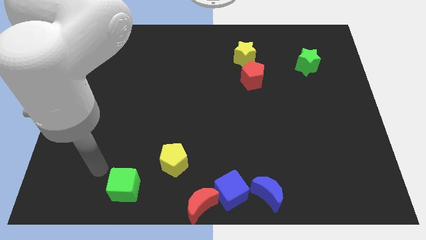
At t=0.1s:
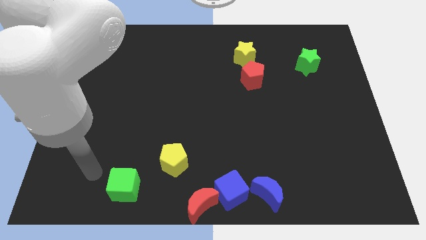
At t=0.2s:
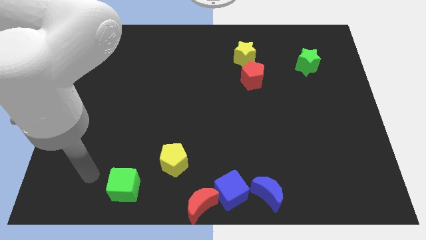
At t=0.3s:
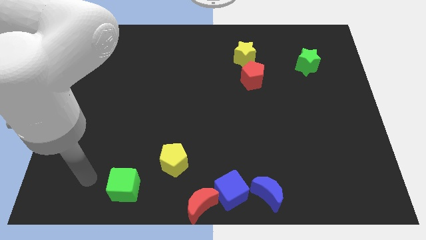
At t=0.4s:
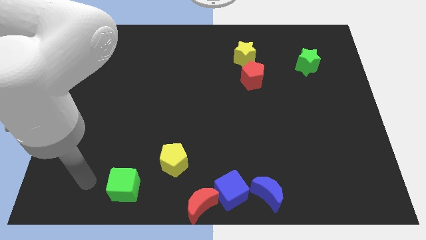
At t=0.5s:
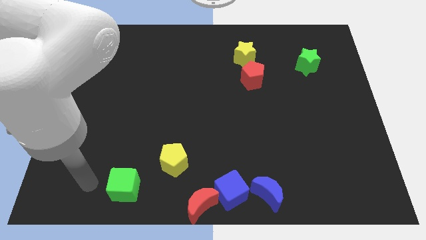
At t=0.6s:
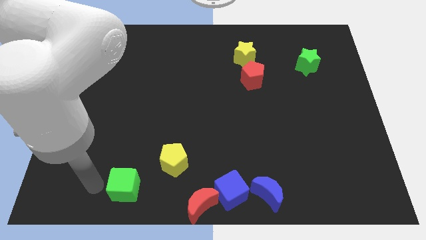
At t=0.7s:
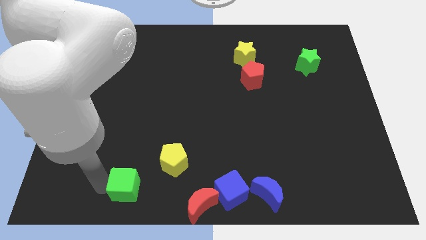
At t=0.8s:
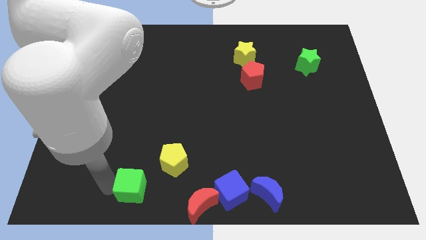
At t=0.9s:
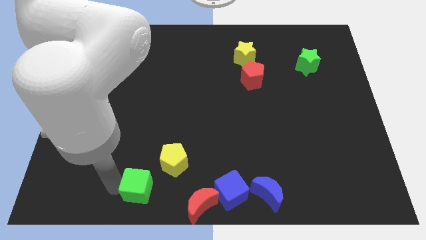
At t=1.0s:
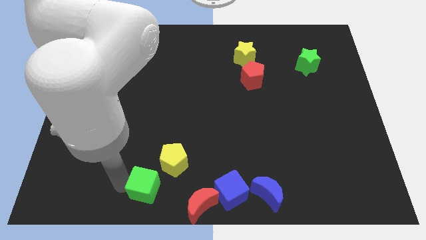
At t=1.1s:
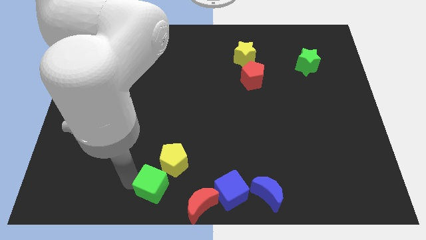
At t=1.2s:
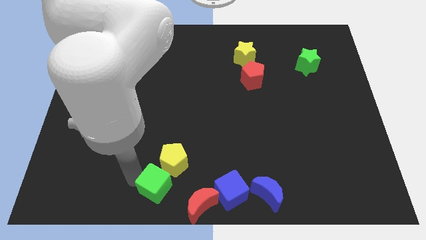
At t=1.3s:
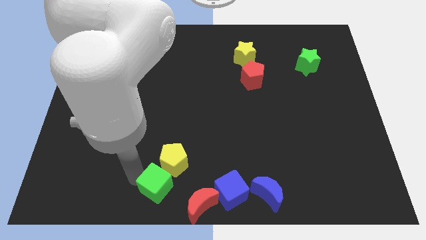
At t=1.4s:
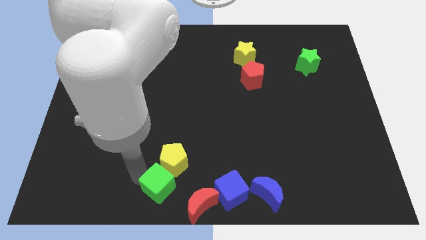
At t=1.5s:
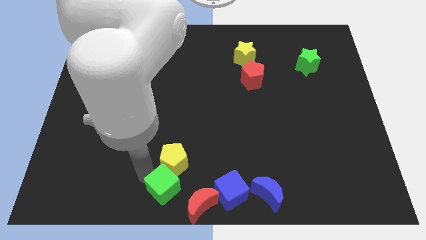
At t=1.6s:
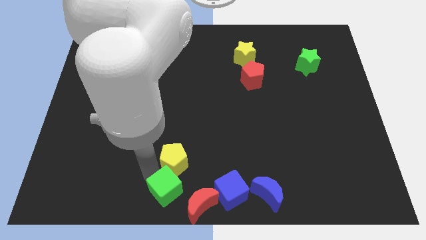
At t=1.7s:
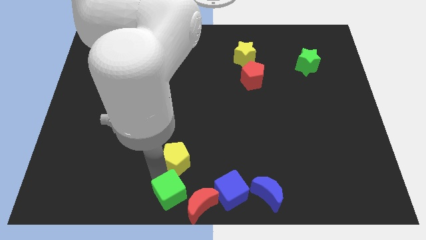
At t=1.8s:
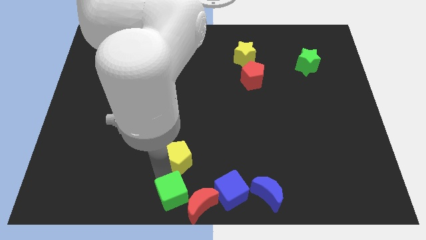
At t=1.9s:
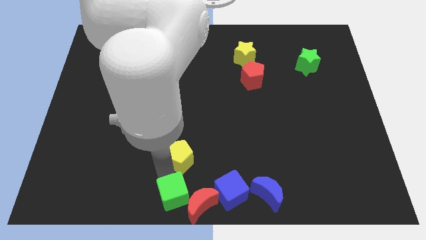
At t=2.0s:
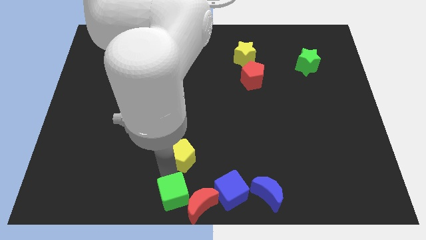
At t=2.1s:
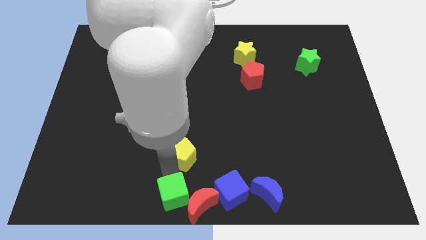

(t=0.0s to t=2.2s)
push the green cube towards red crescent

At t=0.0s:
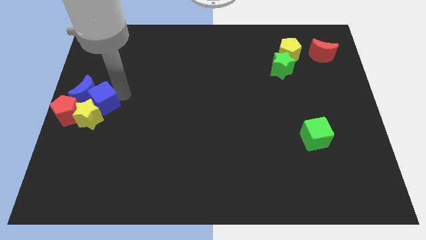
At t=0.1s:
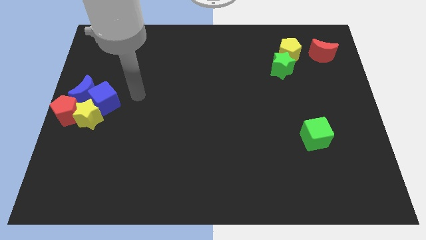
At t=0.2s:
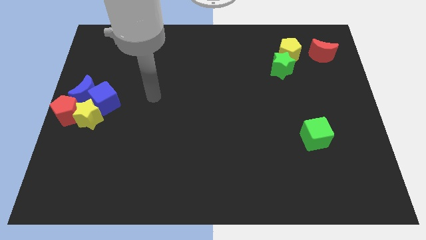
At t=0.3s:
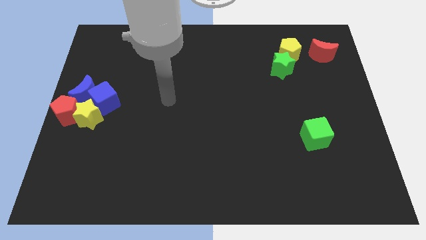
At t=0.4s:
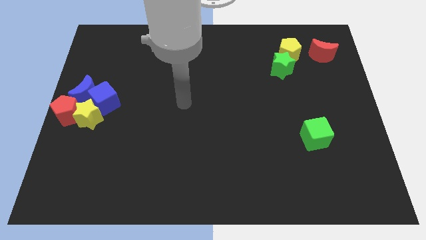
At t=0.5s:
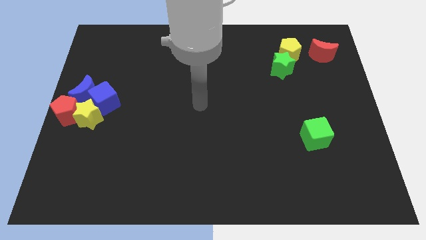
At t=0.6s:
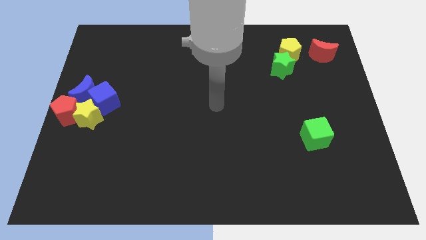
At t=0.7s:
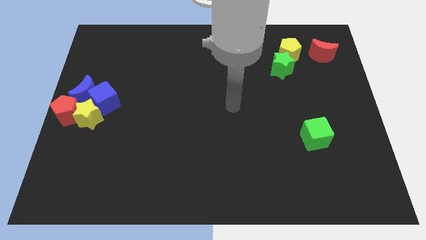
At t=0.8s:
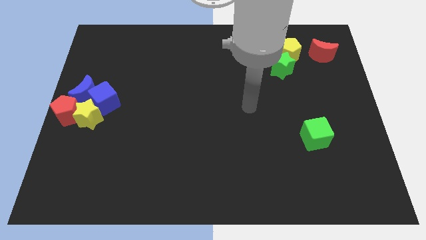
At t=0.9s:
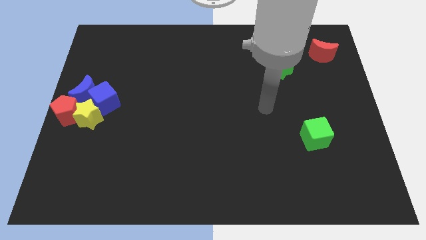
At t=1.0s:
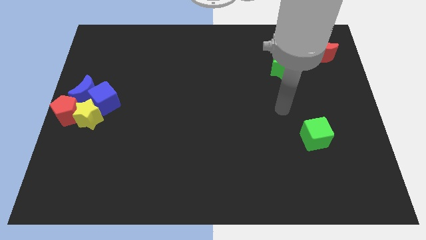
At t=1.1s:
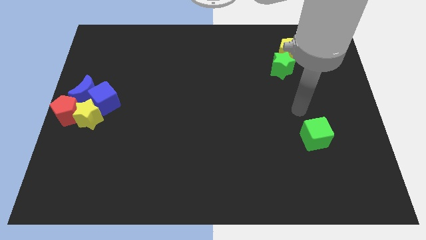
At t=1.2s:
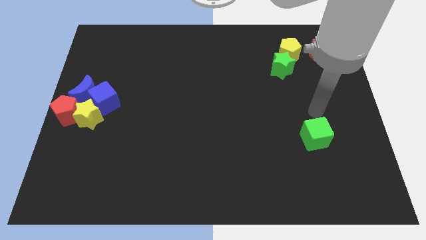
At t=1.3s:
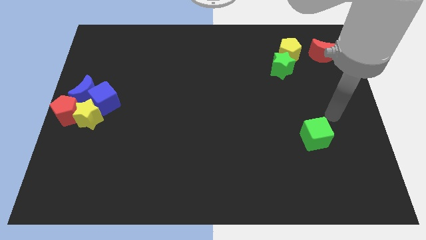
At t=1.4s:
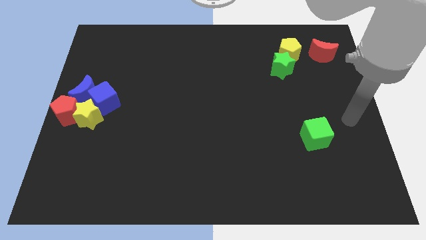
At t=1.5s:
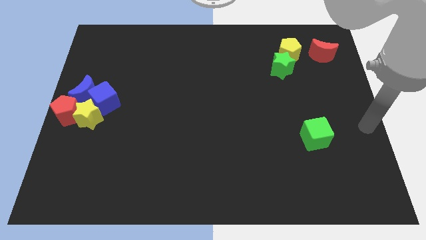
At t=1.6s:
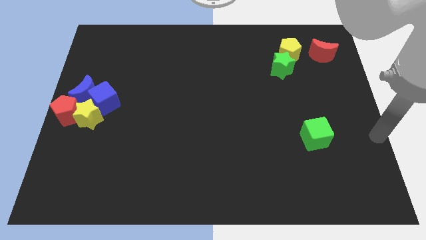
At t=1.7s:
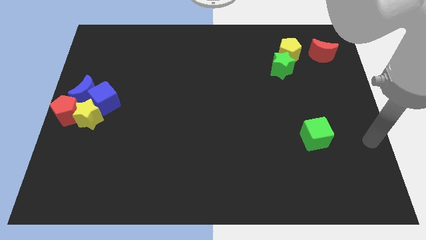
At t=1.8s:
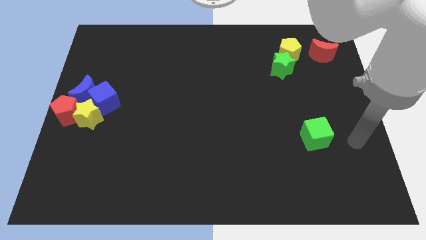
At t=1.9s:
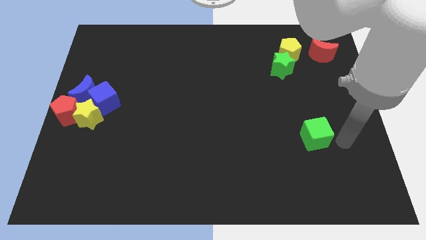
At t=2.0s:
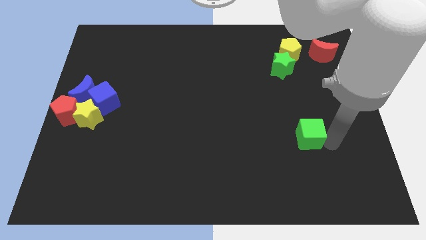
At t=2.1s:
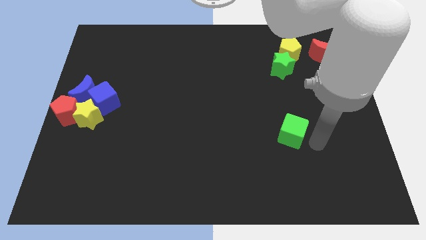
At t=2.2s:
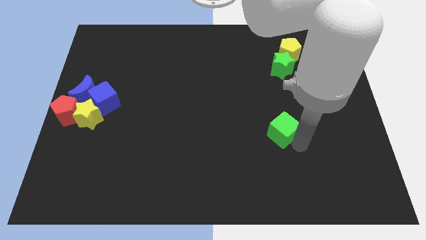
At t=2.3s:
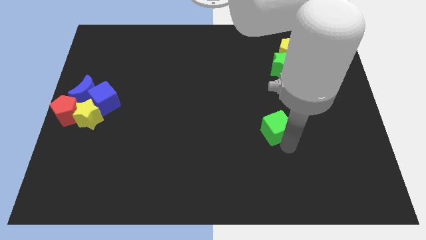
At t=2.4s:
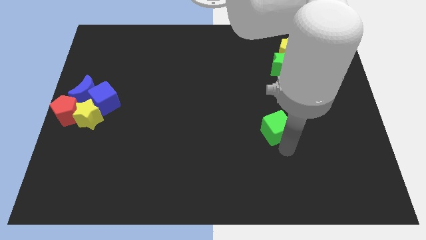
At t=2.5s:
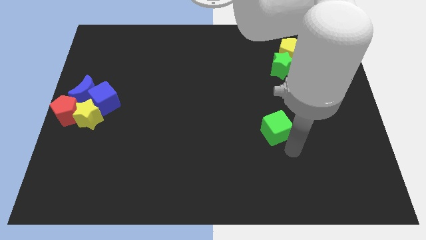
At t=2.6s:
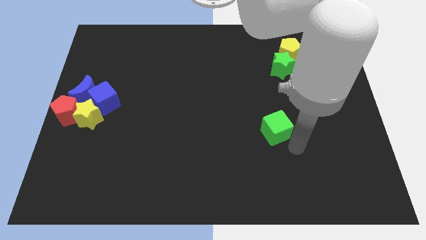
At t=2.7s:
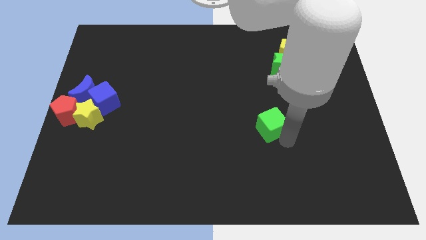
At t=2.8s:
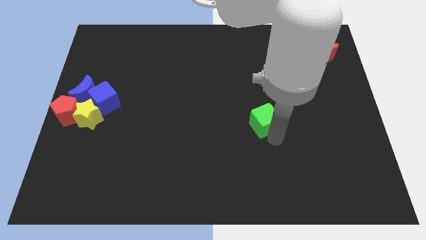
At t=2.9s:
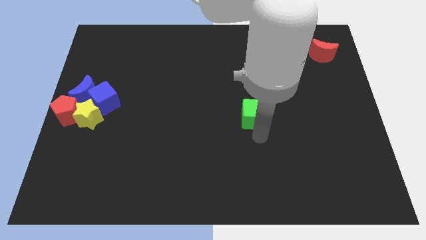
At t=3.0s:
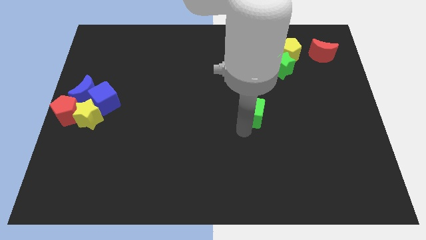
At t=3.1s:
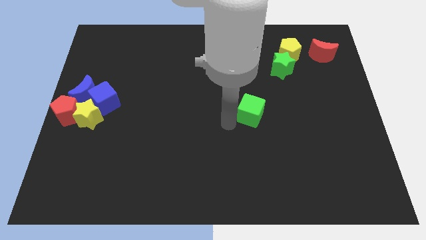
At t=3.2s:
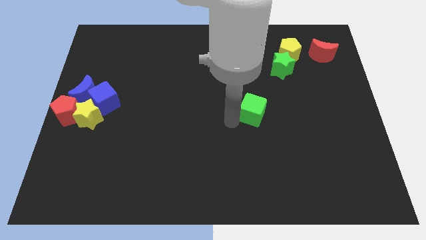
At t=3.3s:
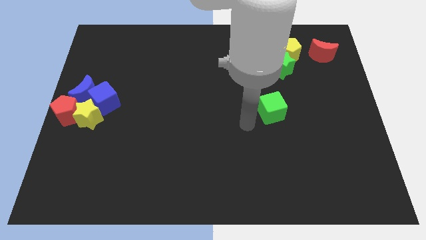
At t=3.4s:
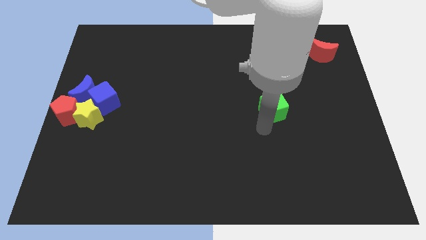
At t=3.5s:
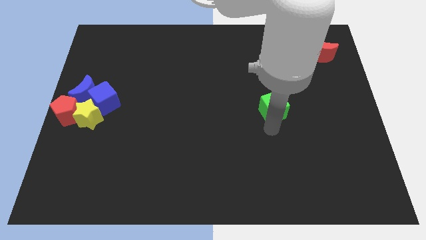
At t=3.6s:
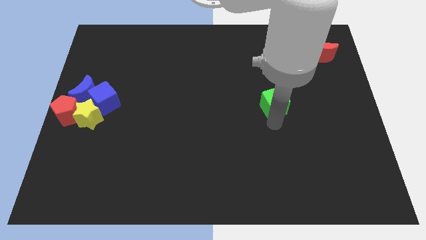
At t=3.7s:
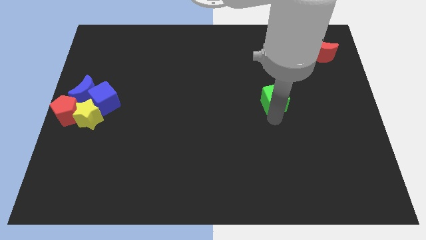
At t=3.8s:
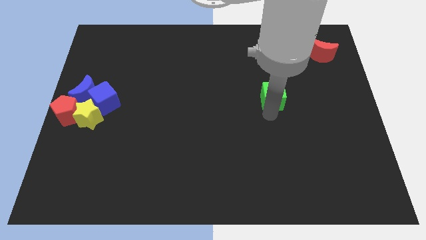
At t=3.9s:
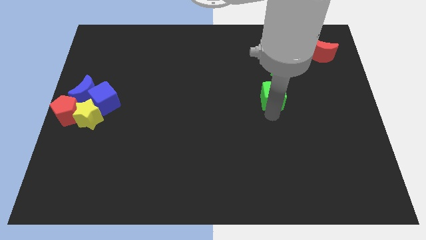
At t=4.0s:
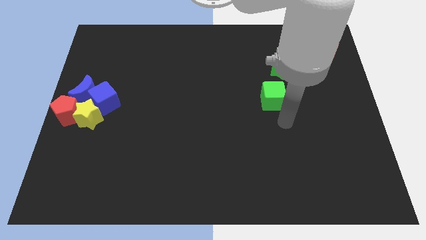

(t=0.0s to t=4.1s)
push the green cube towards the bottom side of the green star

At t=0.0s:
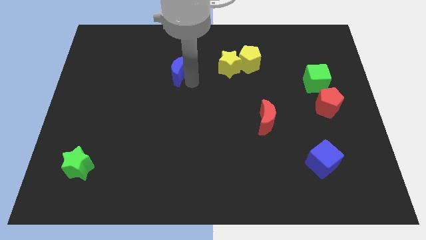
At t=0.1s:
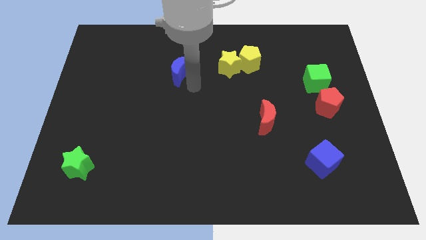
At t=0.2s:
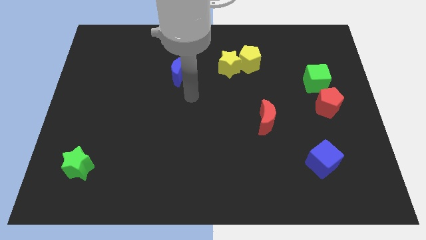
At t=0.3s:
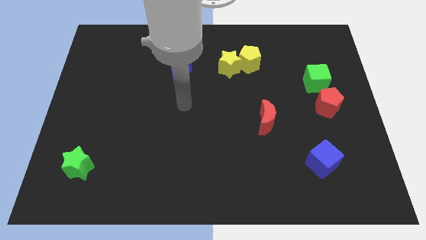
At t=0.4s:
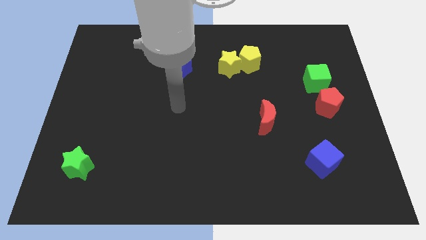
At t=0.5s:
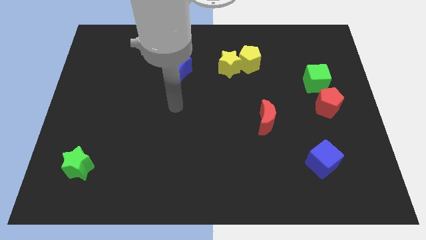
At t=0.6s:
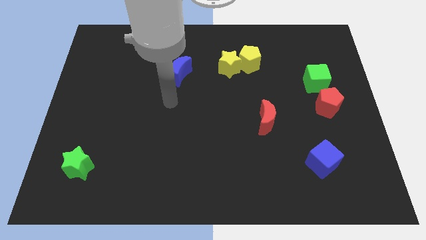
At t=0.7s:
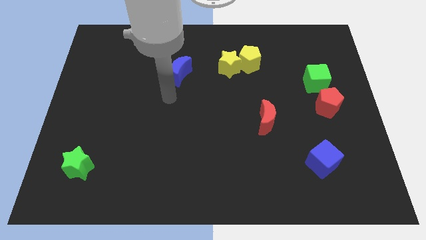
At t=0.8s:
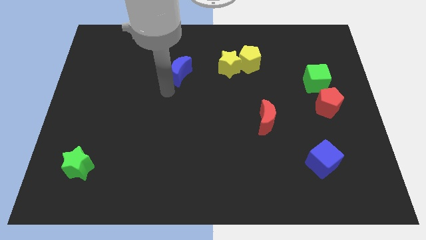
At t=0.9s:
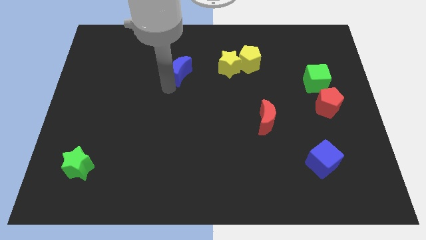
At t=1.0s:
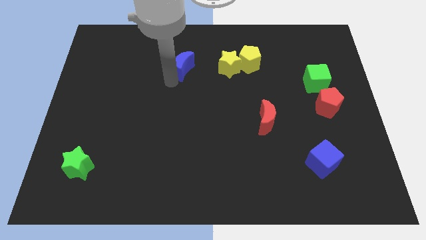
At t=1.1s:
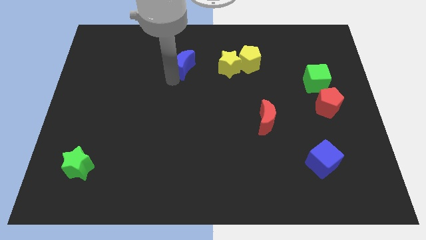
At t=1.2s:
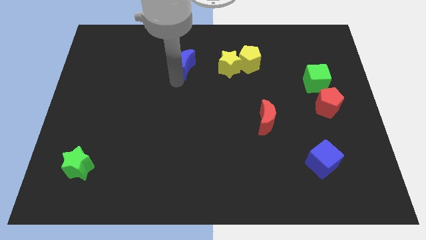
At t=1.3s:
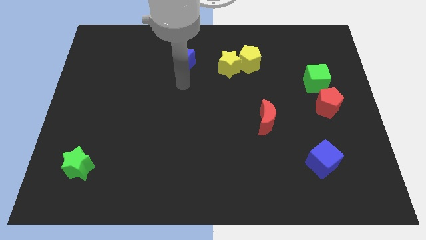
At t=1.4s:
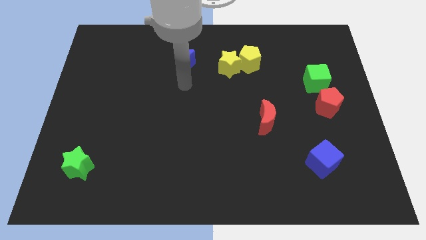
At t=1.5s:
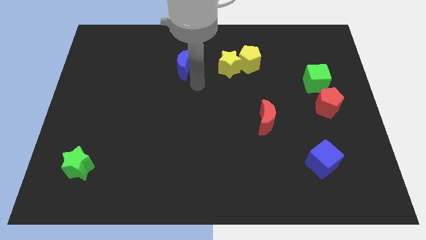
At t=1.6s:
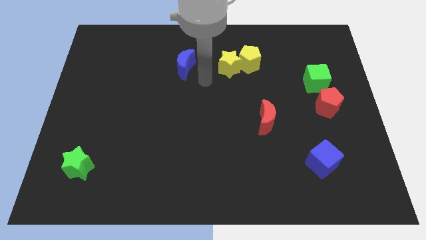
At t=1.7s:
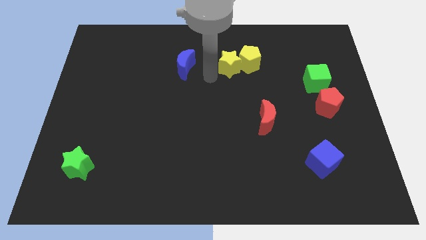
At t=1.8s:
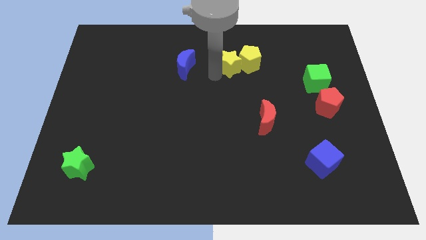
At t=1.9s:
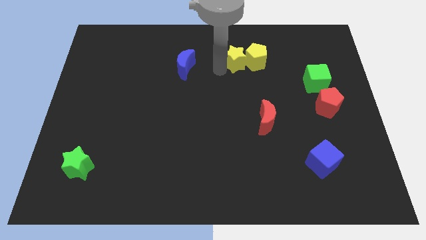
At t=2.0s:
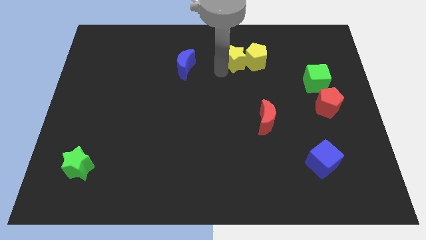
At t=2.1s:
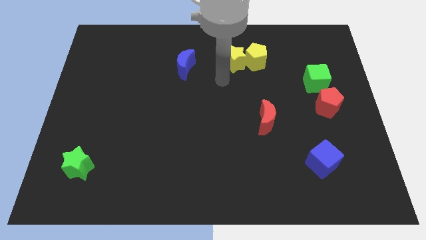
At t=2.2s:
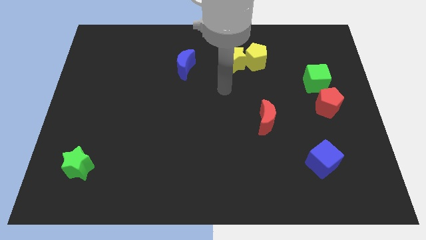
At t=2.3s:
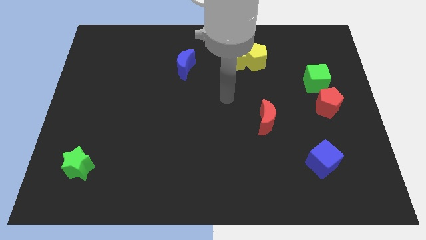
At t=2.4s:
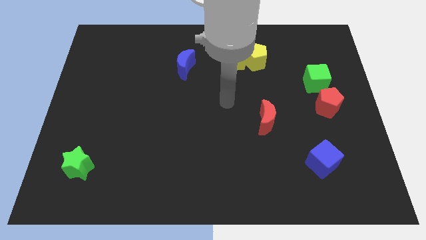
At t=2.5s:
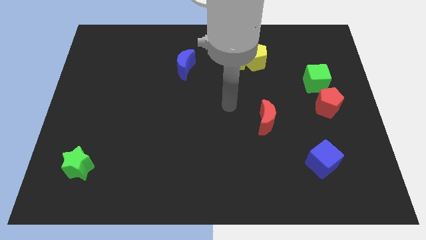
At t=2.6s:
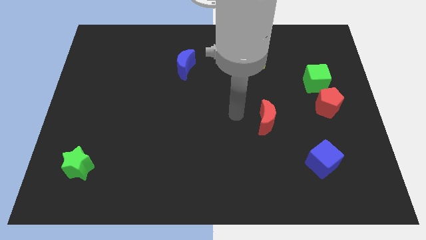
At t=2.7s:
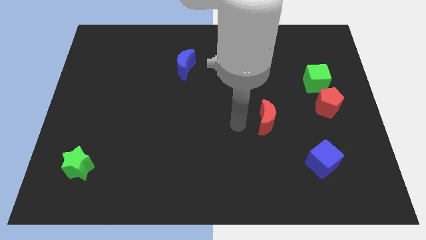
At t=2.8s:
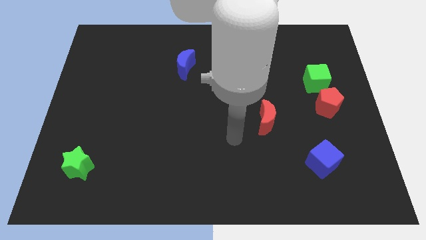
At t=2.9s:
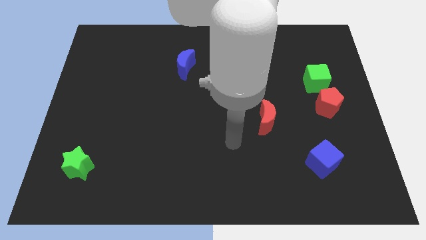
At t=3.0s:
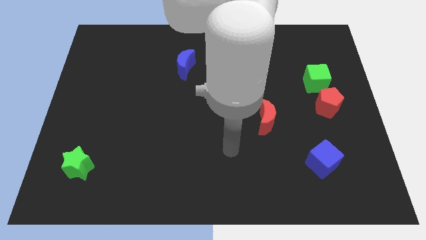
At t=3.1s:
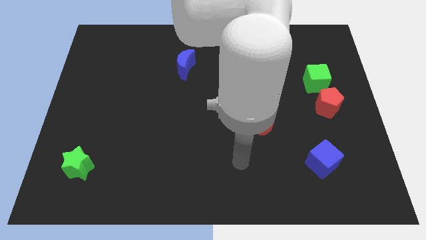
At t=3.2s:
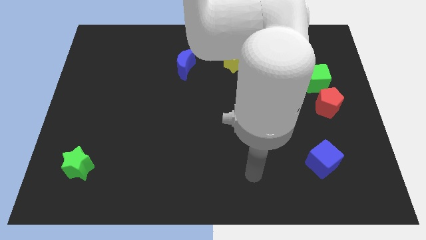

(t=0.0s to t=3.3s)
slightly push the blue moon yellow blocks to the top
